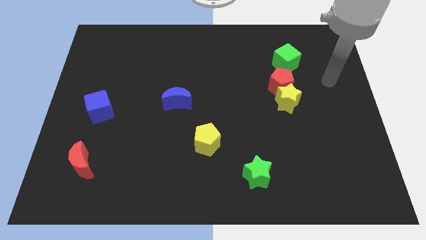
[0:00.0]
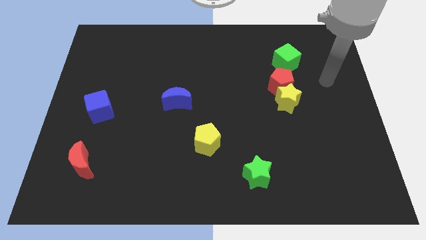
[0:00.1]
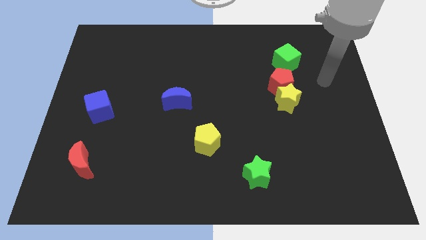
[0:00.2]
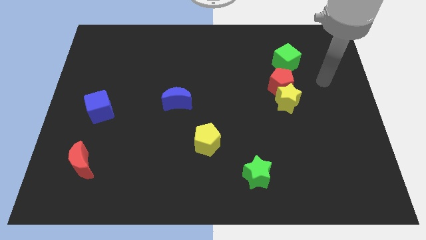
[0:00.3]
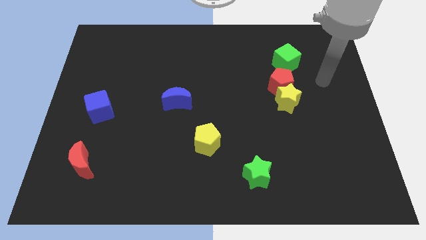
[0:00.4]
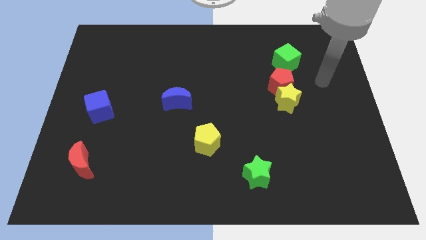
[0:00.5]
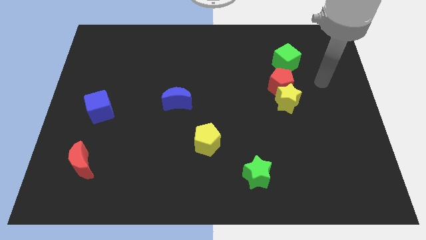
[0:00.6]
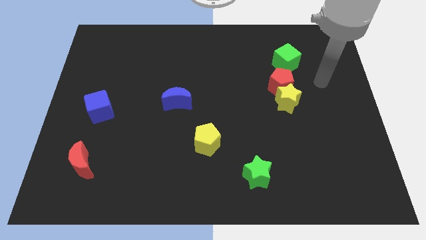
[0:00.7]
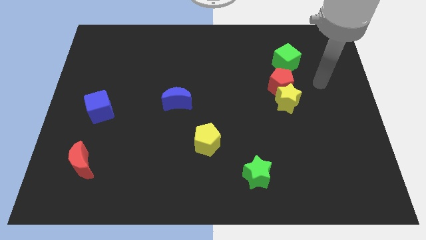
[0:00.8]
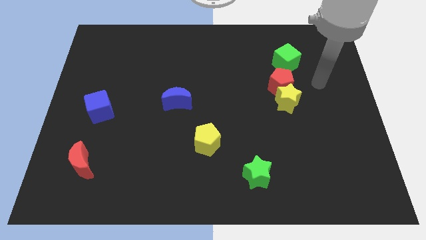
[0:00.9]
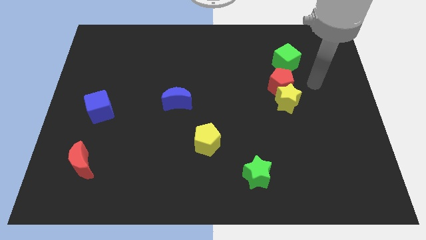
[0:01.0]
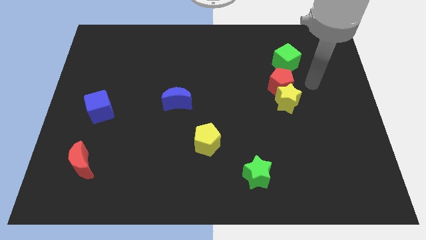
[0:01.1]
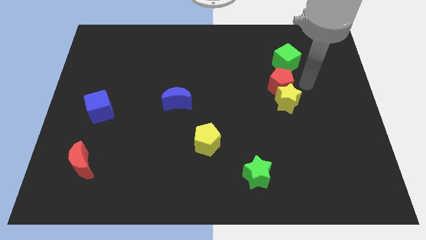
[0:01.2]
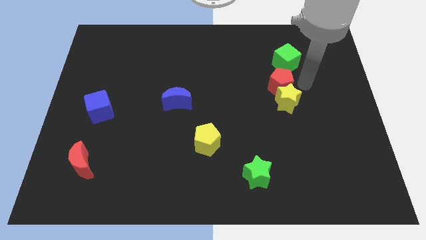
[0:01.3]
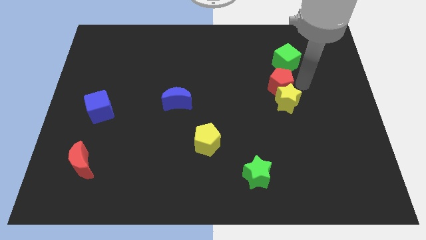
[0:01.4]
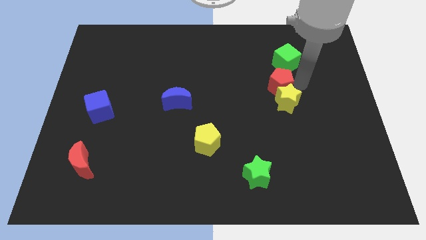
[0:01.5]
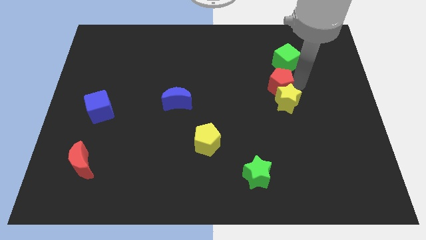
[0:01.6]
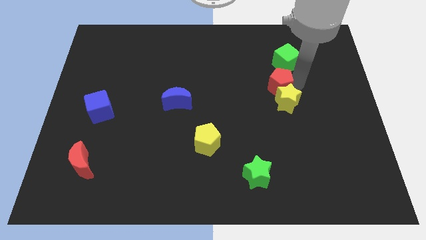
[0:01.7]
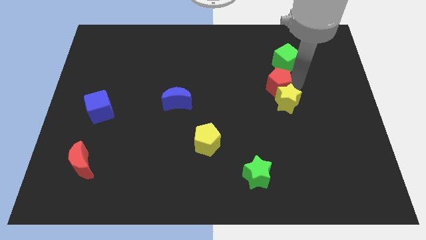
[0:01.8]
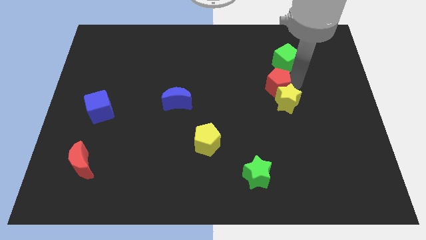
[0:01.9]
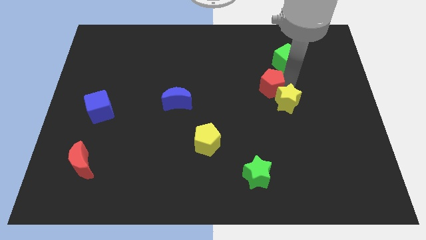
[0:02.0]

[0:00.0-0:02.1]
move the arm towards the right side of the red pentagon

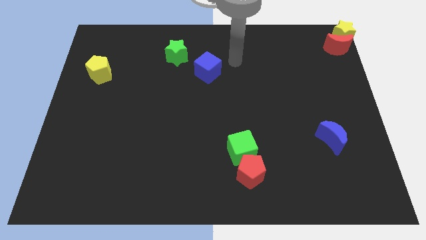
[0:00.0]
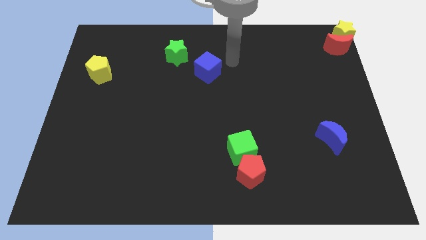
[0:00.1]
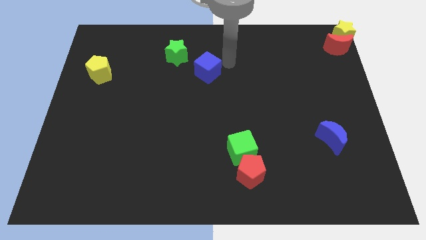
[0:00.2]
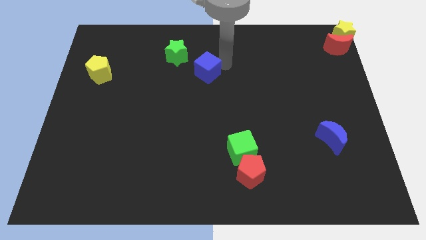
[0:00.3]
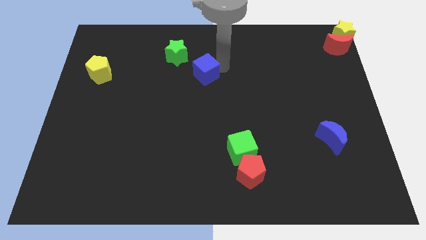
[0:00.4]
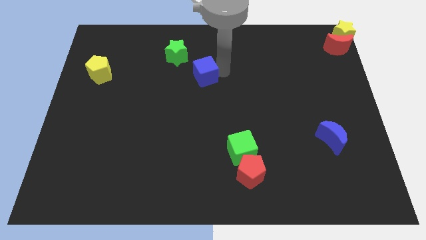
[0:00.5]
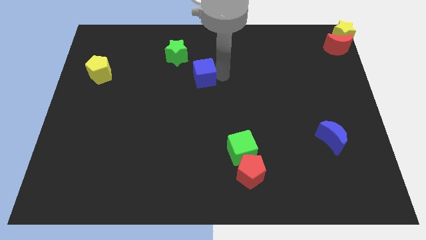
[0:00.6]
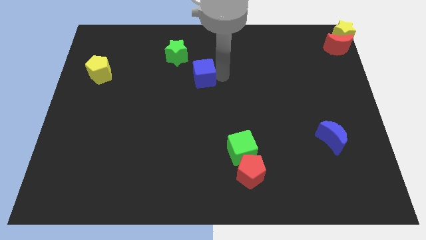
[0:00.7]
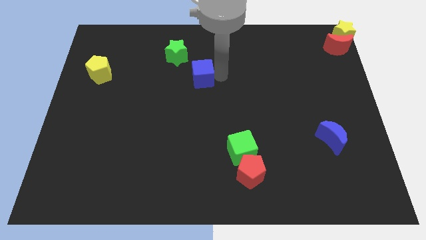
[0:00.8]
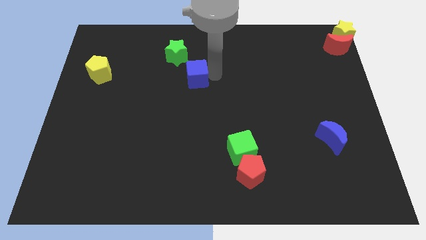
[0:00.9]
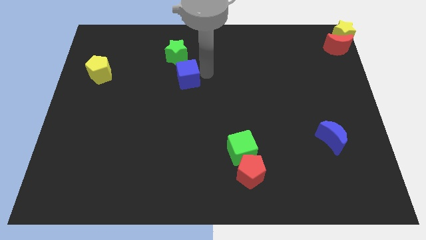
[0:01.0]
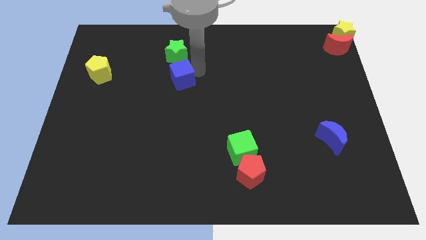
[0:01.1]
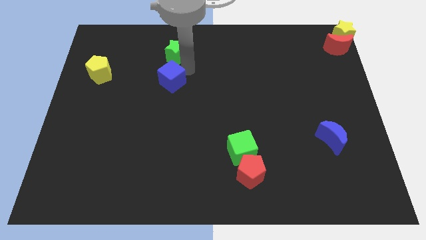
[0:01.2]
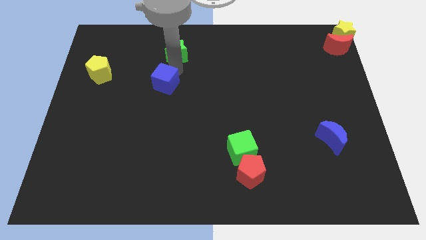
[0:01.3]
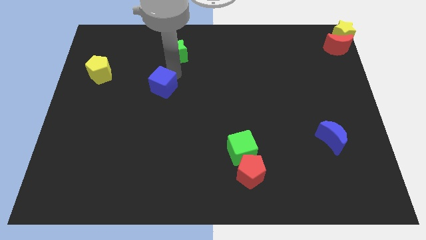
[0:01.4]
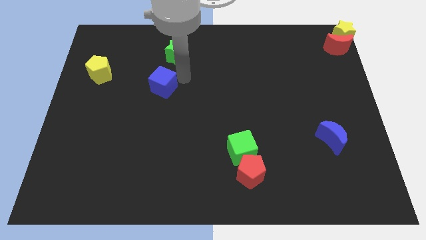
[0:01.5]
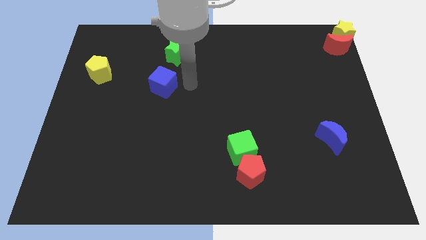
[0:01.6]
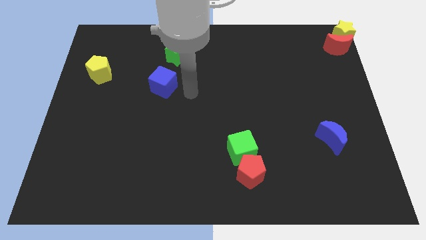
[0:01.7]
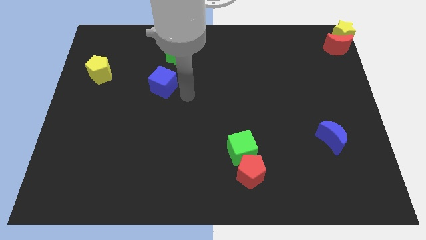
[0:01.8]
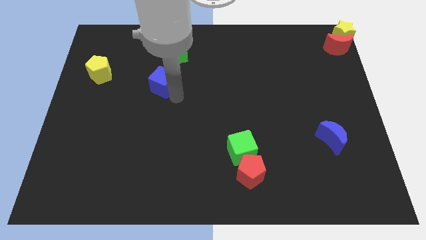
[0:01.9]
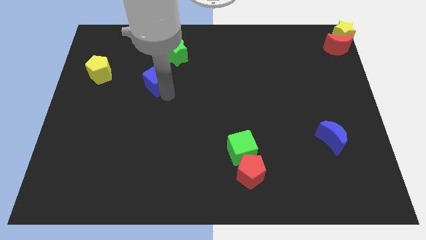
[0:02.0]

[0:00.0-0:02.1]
slide blue cube to the bottom left of green star

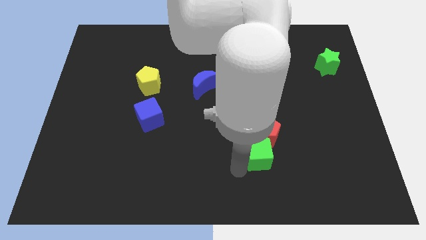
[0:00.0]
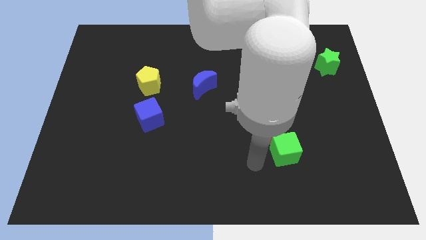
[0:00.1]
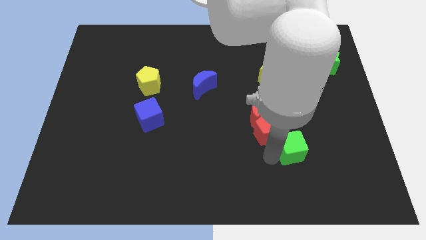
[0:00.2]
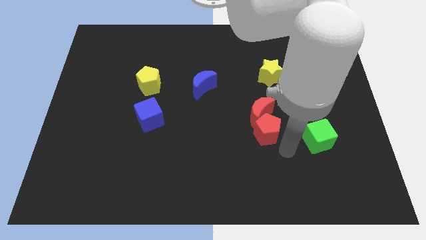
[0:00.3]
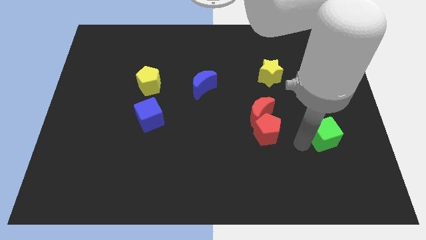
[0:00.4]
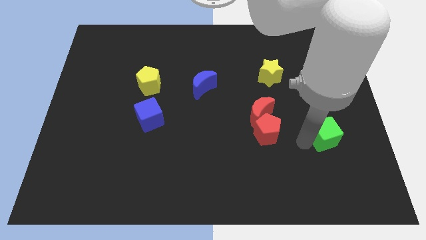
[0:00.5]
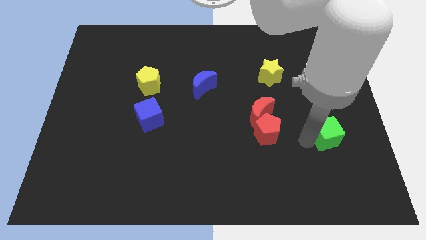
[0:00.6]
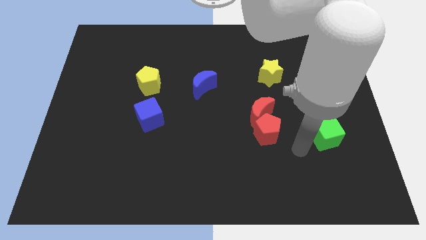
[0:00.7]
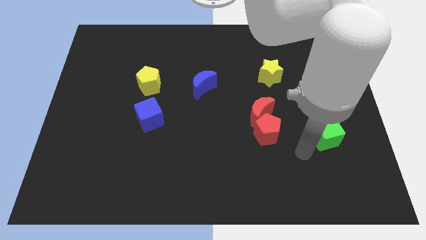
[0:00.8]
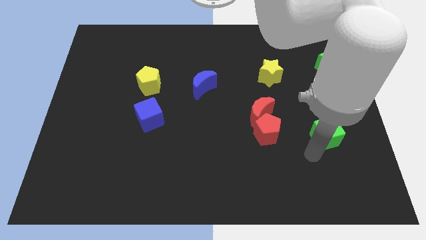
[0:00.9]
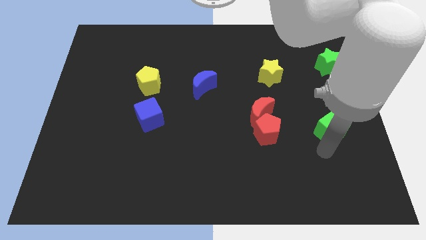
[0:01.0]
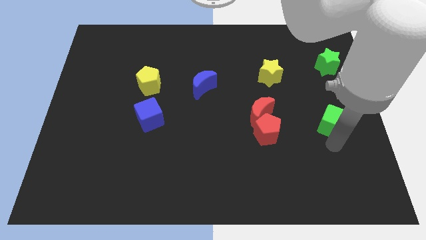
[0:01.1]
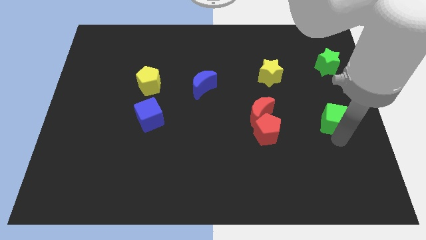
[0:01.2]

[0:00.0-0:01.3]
push the green square towards the right center of the board

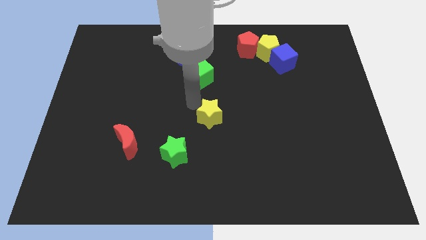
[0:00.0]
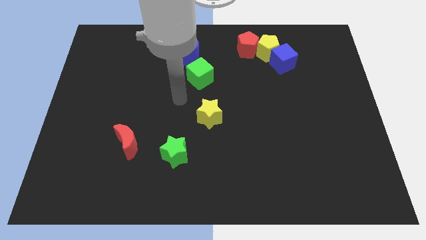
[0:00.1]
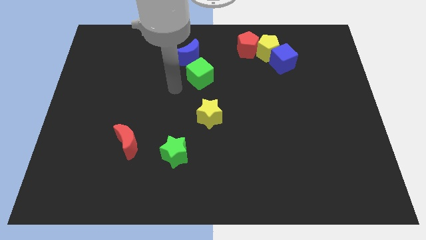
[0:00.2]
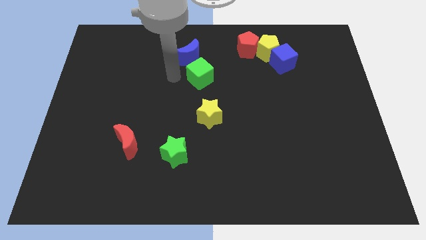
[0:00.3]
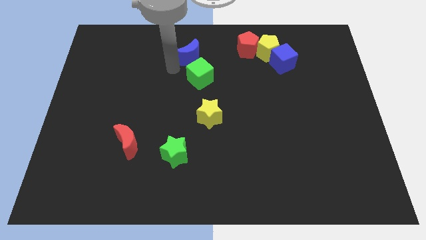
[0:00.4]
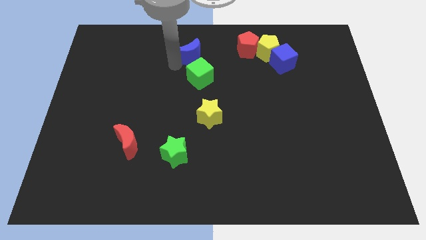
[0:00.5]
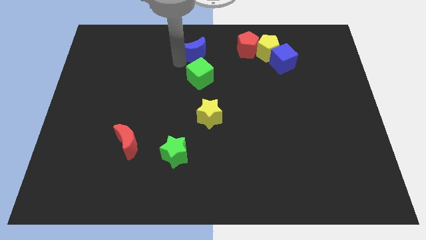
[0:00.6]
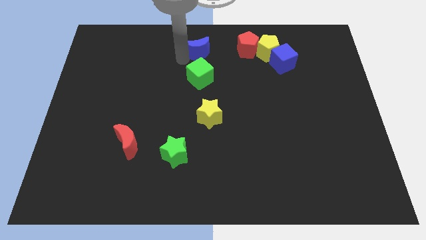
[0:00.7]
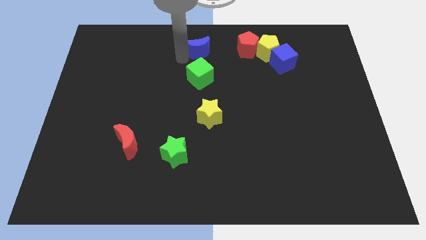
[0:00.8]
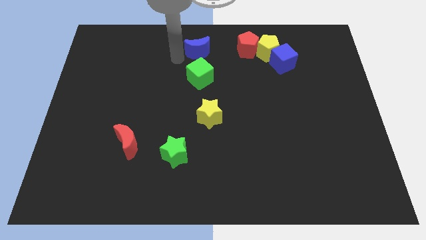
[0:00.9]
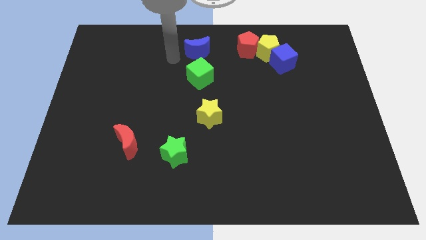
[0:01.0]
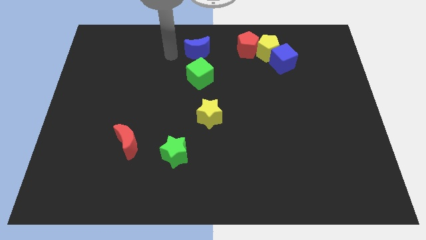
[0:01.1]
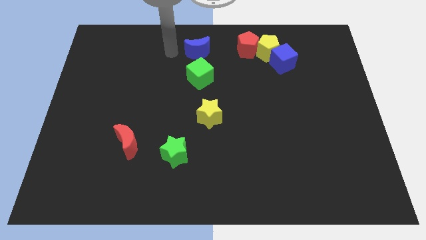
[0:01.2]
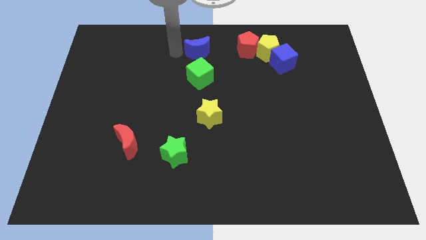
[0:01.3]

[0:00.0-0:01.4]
put the blue moon above the green cube

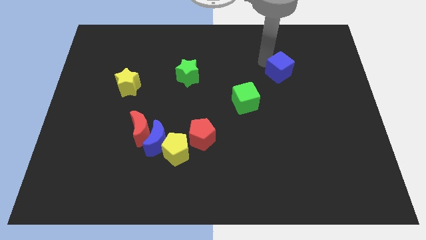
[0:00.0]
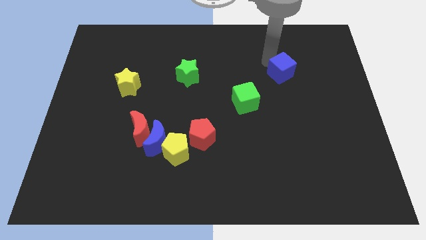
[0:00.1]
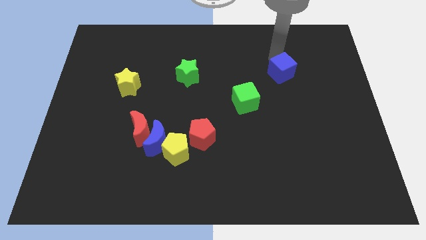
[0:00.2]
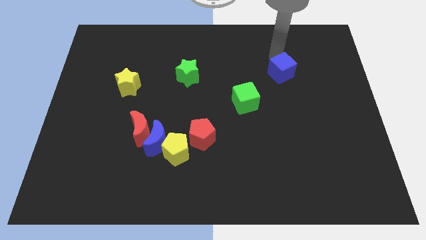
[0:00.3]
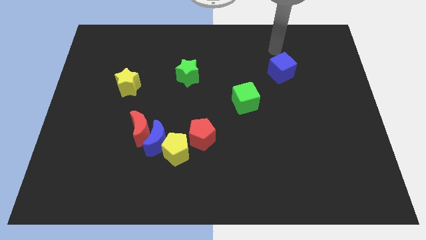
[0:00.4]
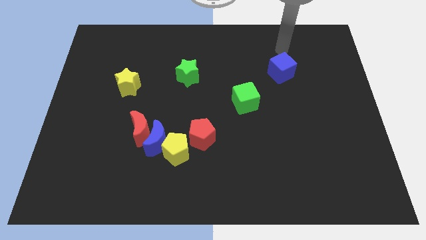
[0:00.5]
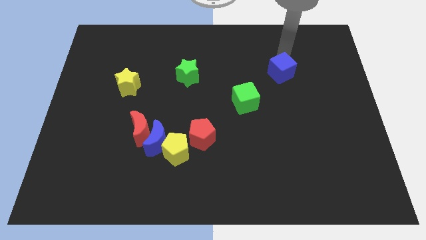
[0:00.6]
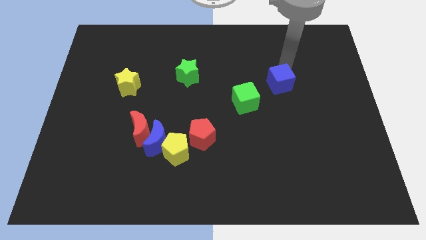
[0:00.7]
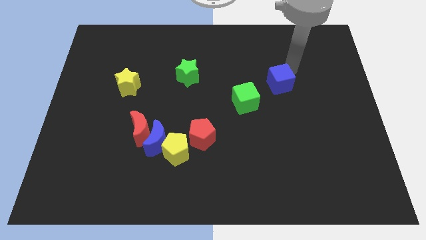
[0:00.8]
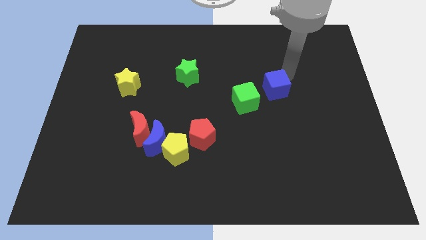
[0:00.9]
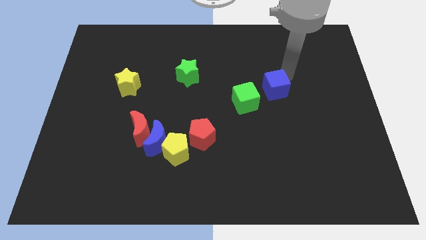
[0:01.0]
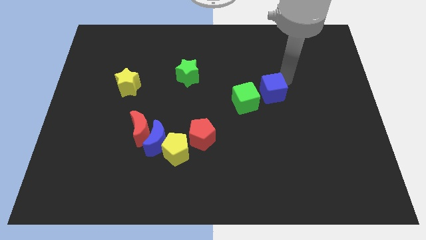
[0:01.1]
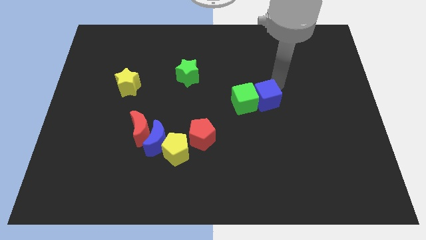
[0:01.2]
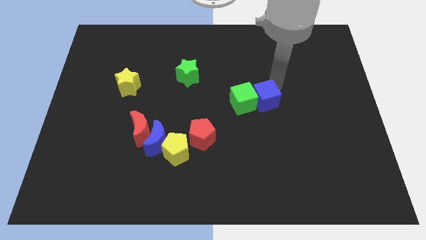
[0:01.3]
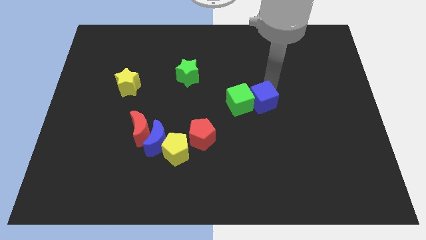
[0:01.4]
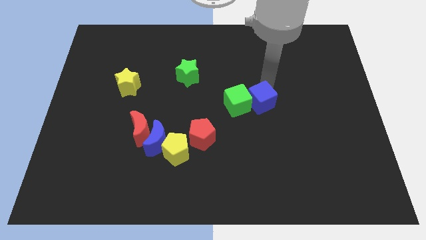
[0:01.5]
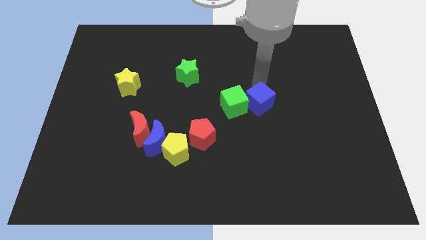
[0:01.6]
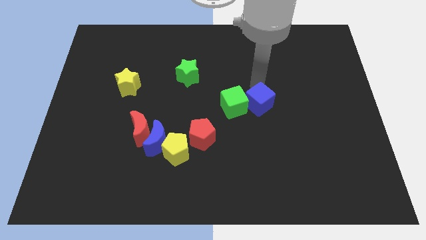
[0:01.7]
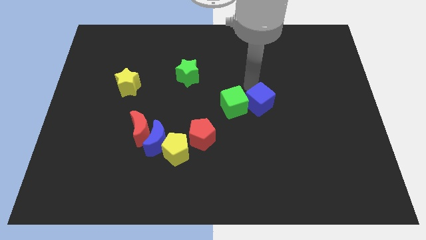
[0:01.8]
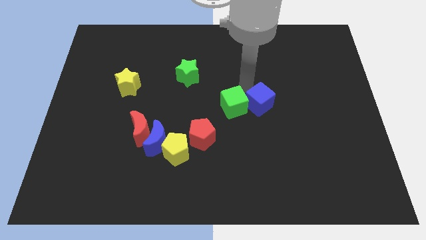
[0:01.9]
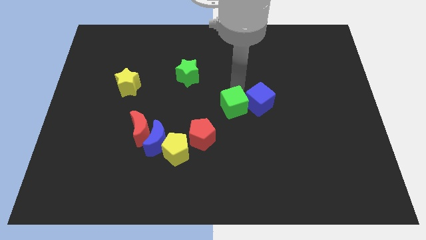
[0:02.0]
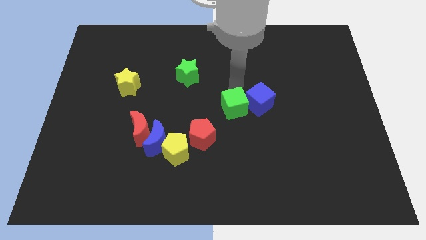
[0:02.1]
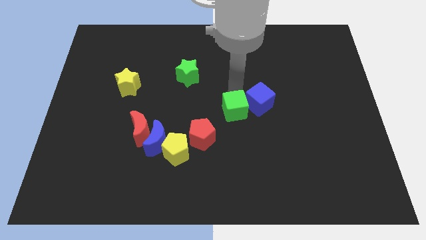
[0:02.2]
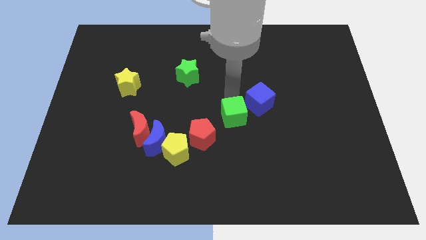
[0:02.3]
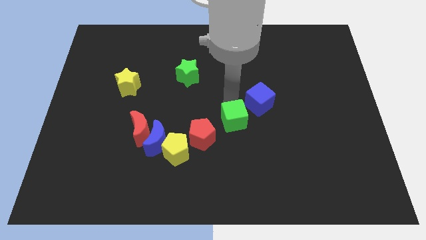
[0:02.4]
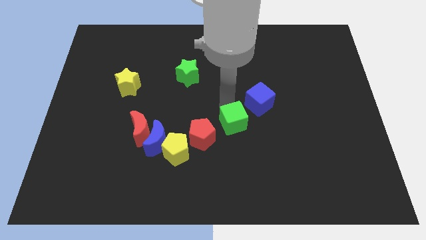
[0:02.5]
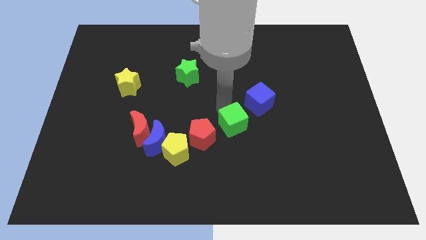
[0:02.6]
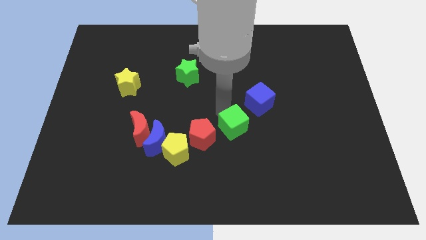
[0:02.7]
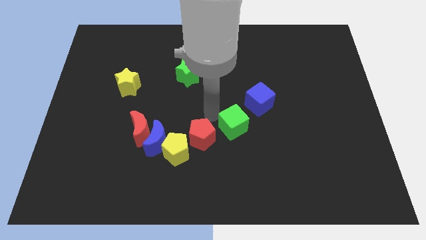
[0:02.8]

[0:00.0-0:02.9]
push the blue cube into the green cube
